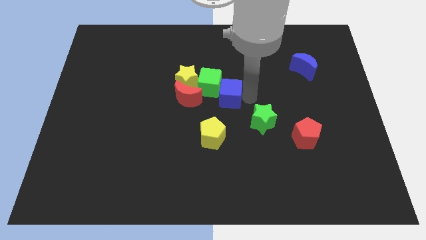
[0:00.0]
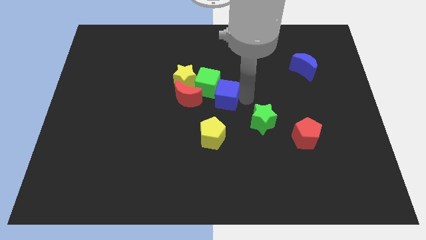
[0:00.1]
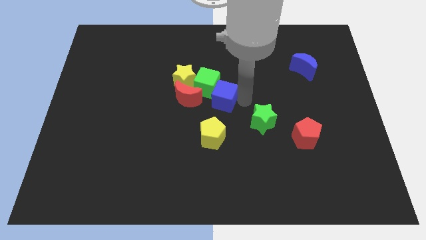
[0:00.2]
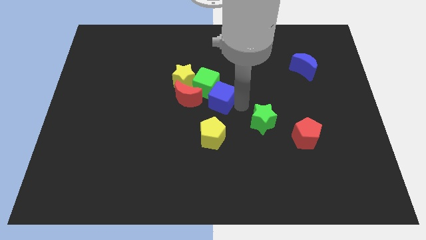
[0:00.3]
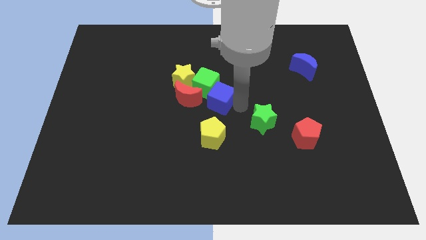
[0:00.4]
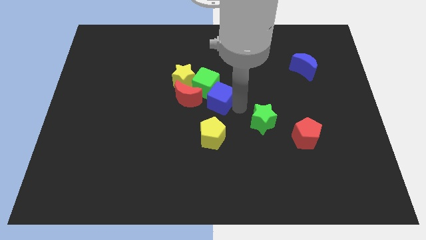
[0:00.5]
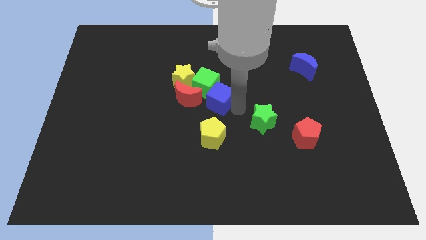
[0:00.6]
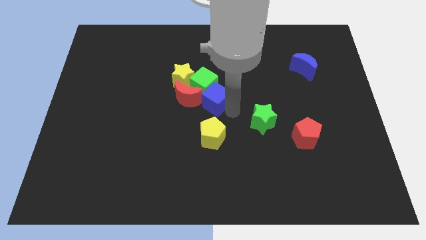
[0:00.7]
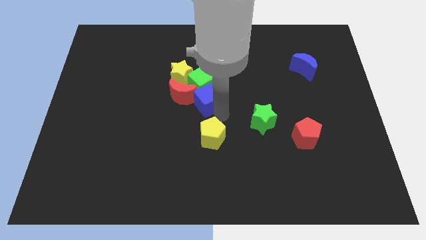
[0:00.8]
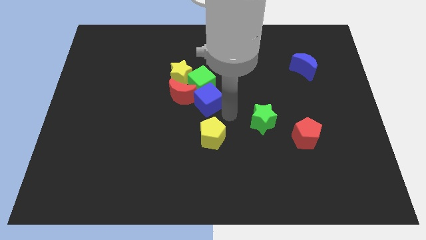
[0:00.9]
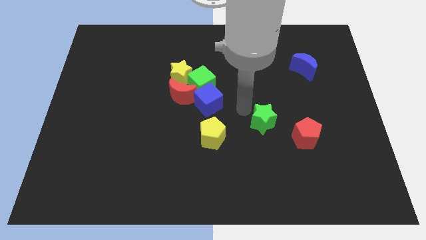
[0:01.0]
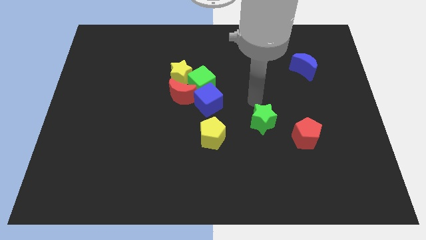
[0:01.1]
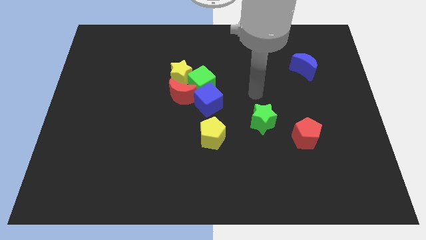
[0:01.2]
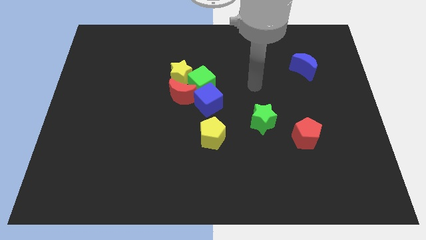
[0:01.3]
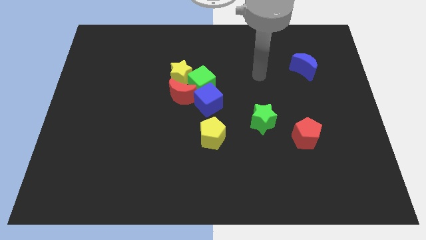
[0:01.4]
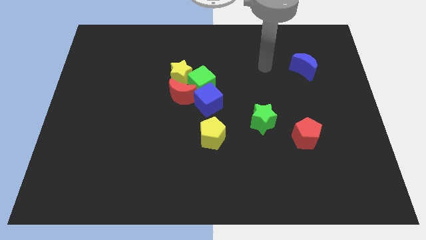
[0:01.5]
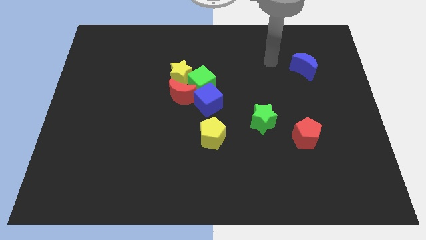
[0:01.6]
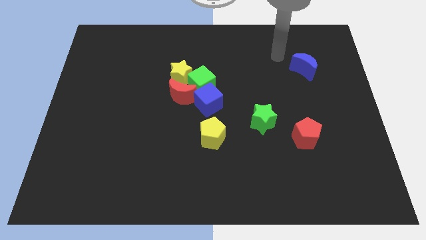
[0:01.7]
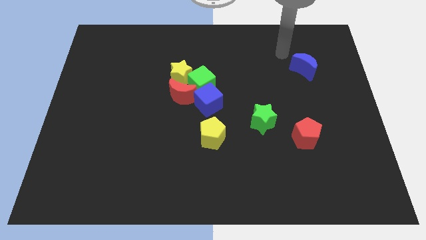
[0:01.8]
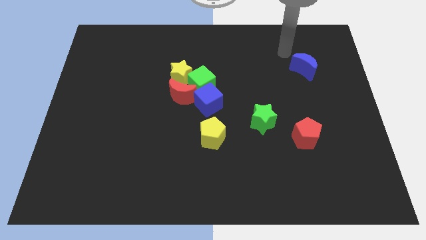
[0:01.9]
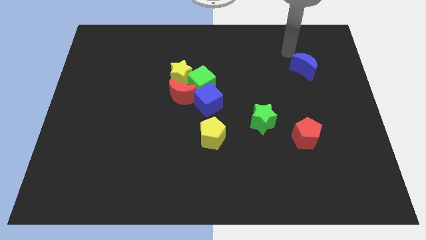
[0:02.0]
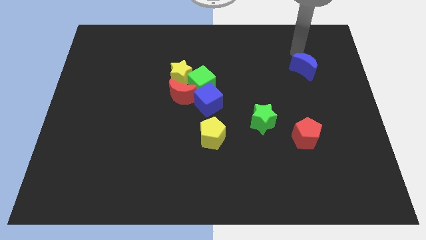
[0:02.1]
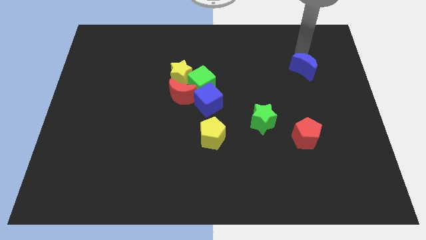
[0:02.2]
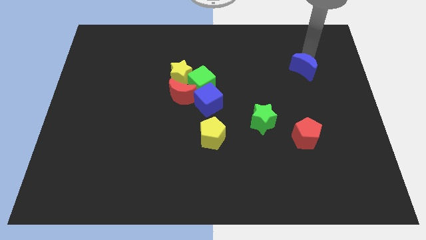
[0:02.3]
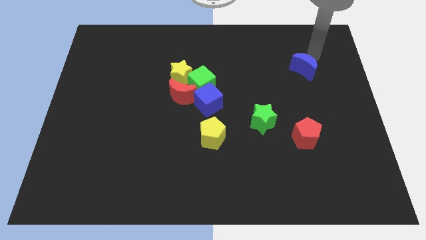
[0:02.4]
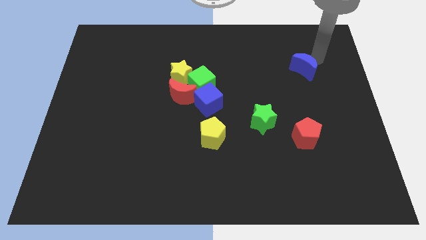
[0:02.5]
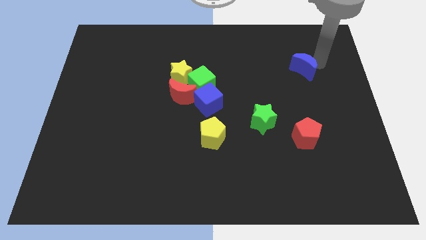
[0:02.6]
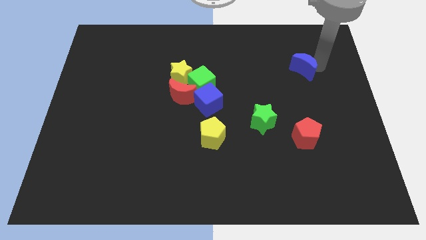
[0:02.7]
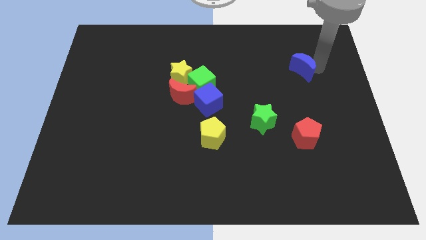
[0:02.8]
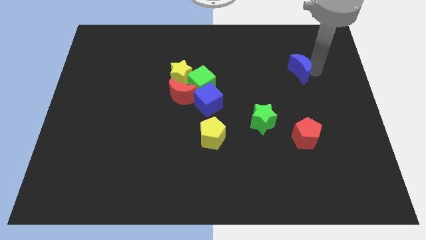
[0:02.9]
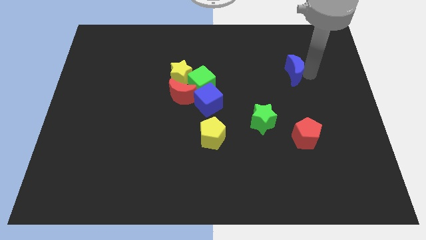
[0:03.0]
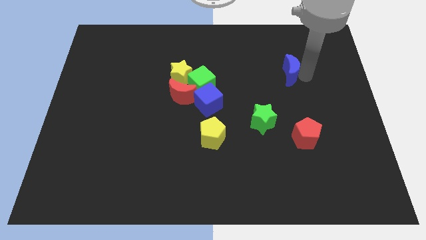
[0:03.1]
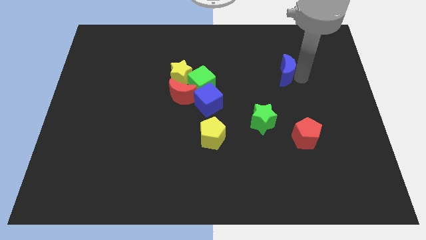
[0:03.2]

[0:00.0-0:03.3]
slightly move the blue crescent to the left

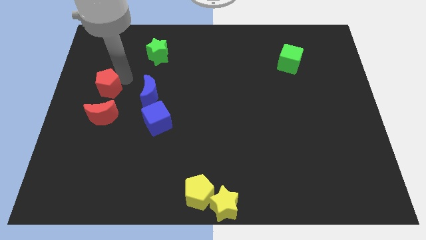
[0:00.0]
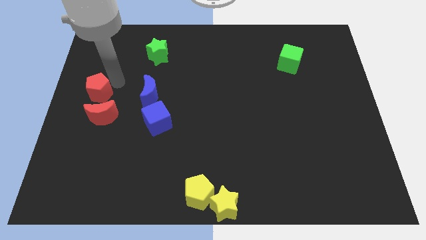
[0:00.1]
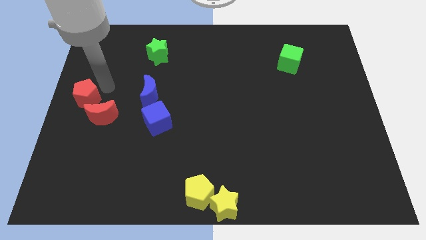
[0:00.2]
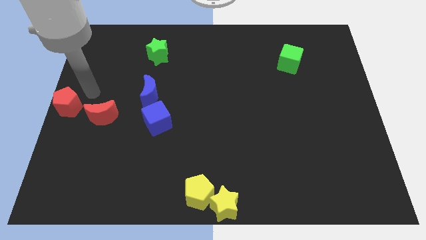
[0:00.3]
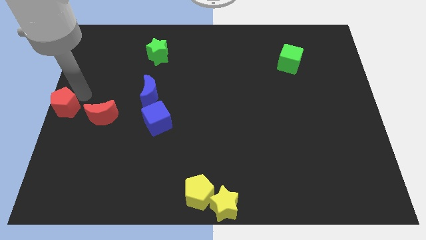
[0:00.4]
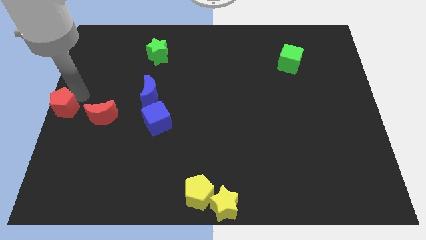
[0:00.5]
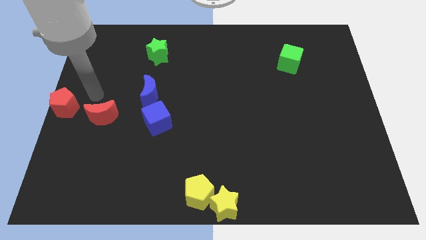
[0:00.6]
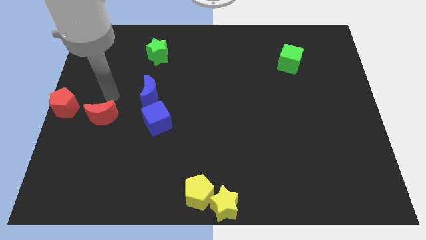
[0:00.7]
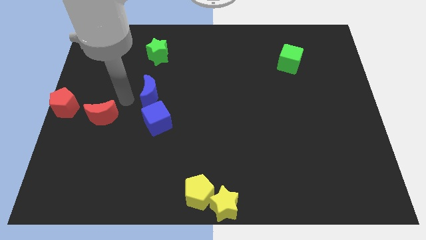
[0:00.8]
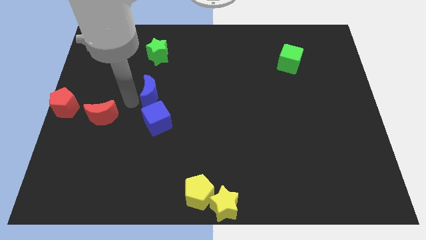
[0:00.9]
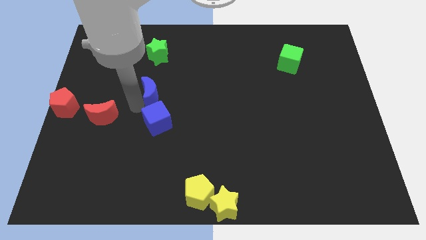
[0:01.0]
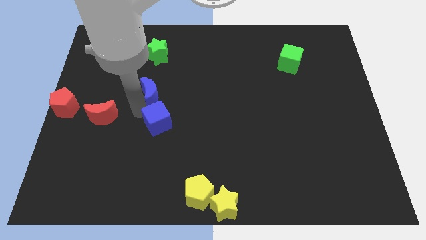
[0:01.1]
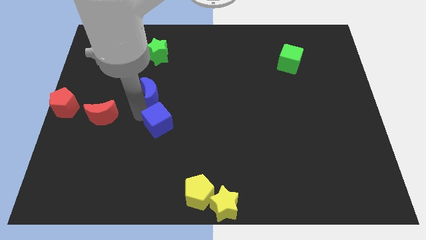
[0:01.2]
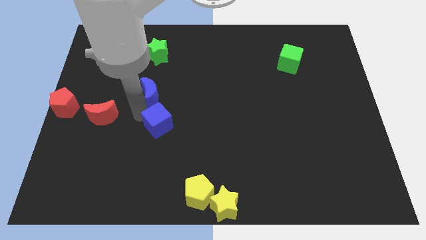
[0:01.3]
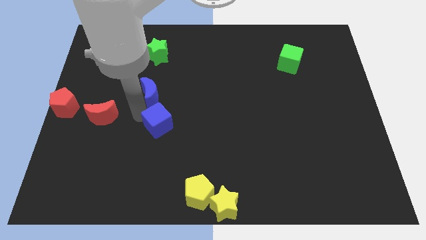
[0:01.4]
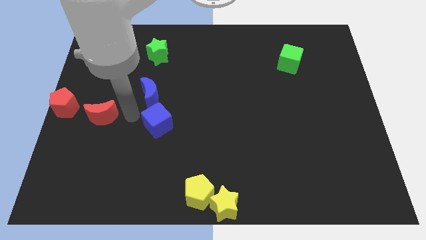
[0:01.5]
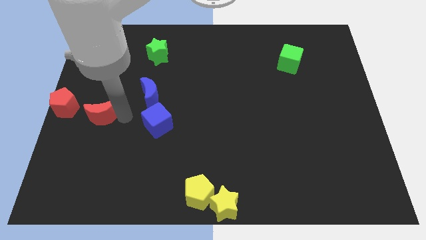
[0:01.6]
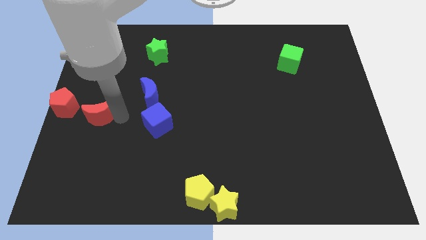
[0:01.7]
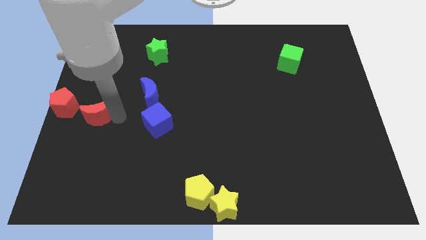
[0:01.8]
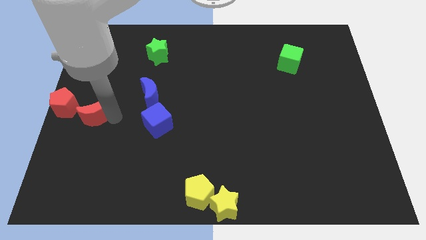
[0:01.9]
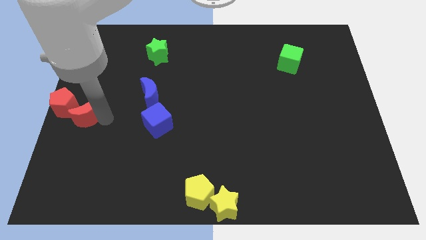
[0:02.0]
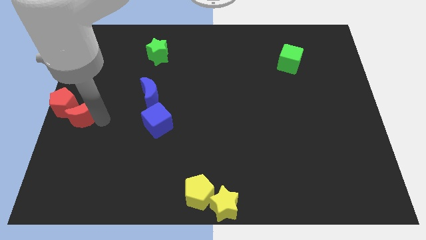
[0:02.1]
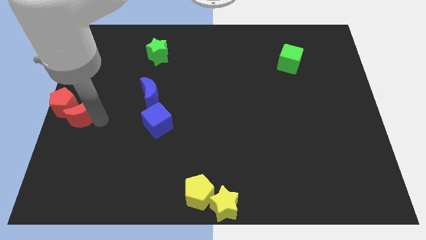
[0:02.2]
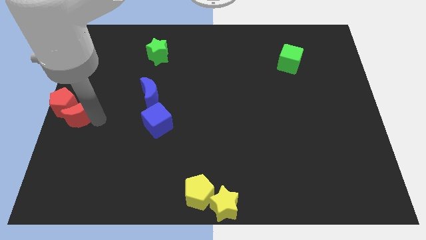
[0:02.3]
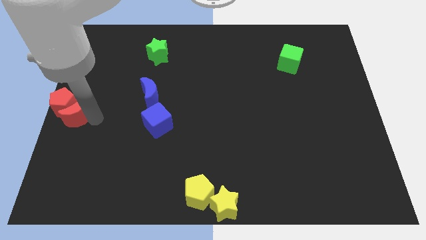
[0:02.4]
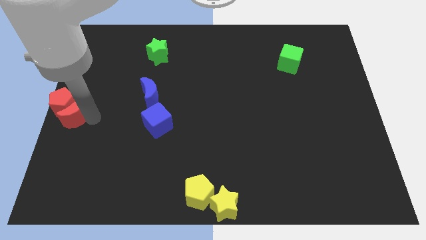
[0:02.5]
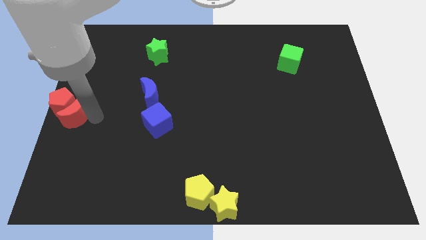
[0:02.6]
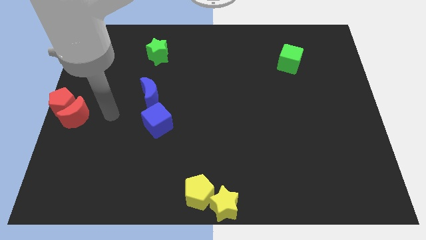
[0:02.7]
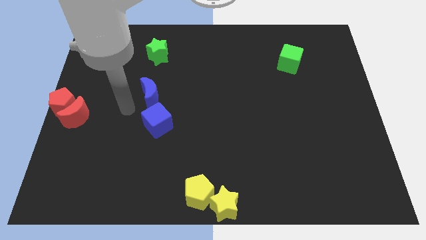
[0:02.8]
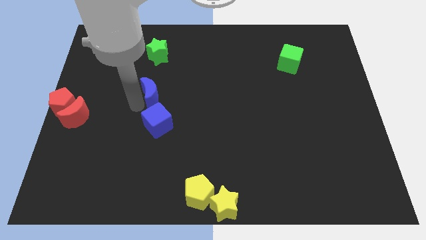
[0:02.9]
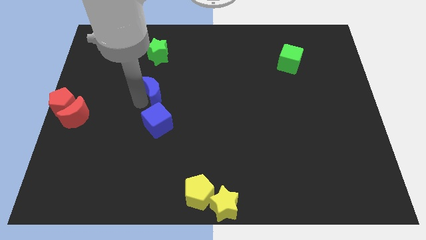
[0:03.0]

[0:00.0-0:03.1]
push the red crescent to the center left to touch the red pentagon

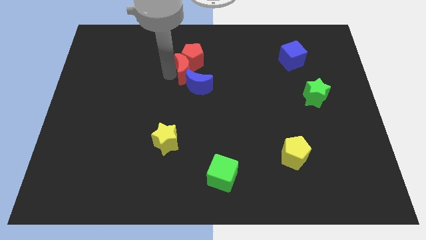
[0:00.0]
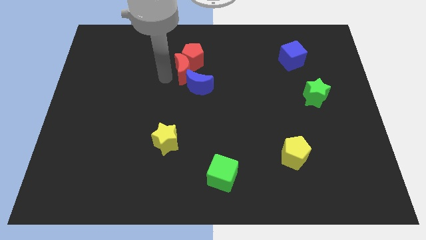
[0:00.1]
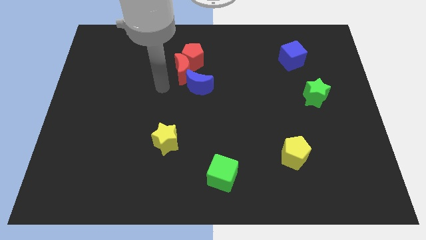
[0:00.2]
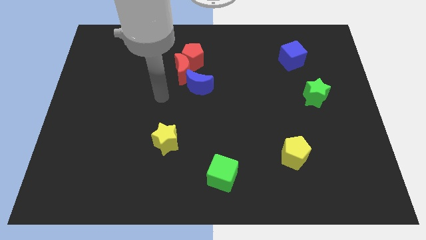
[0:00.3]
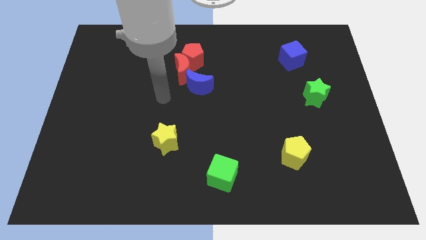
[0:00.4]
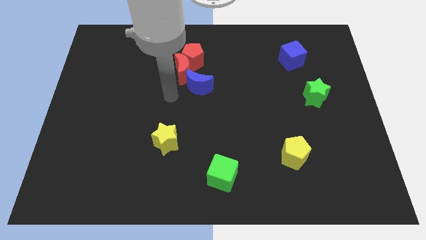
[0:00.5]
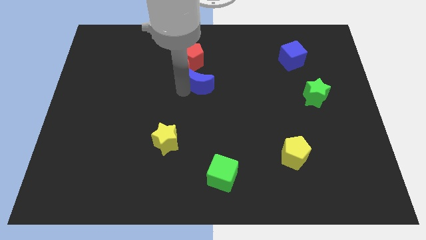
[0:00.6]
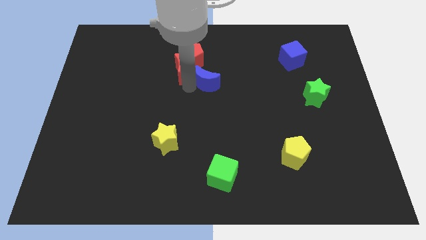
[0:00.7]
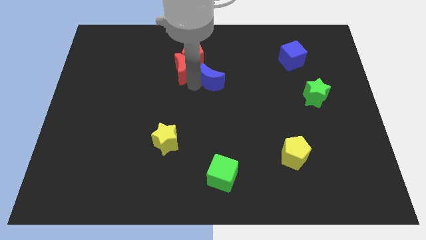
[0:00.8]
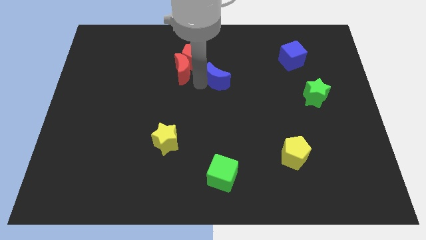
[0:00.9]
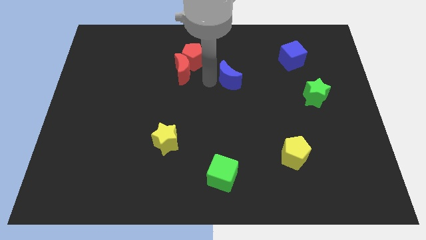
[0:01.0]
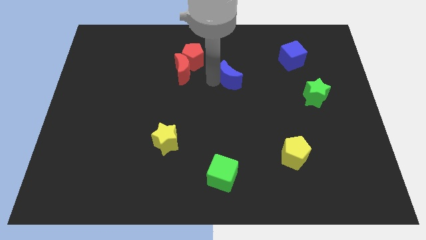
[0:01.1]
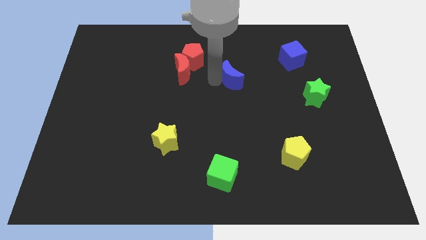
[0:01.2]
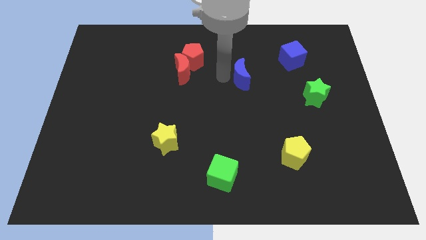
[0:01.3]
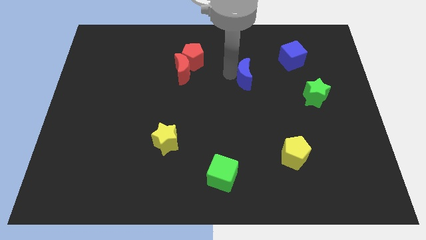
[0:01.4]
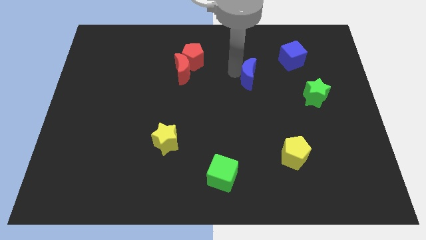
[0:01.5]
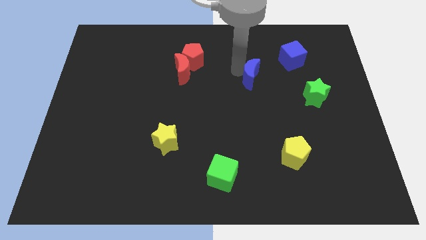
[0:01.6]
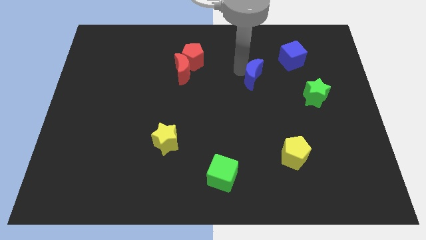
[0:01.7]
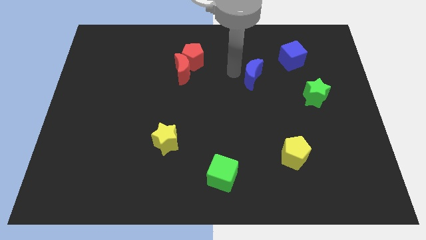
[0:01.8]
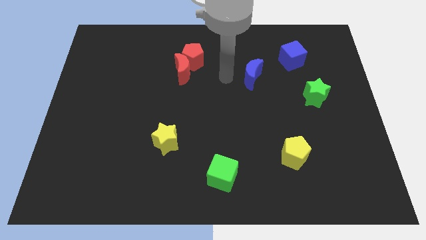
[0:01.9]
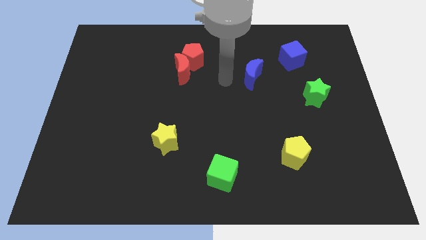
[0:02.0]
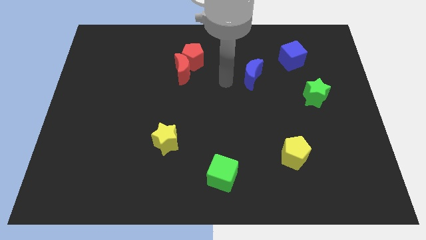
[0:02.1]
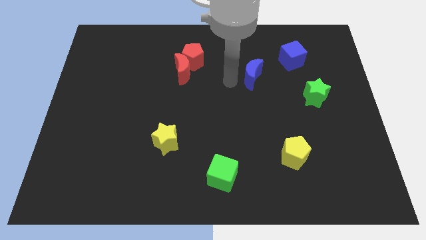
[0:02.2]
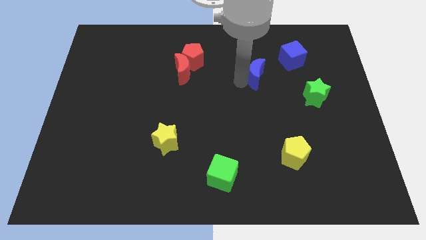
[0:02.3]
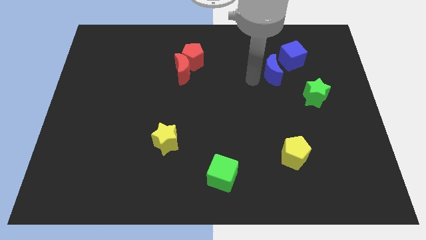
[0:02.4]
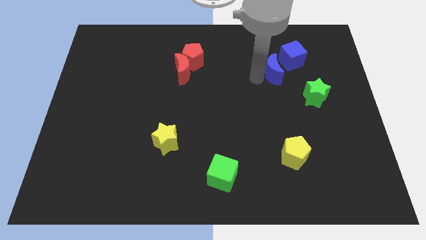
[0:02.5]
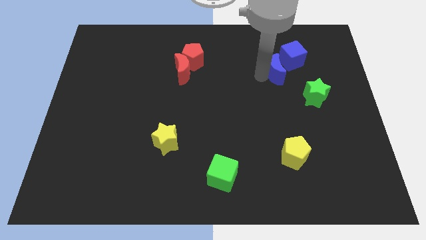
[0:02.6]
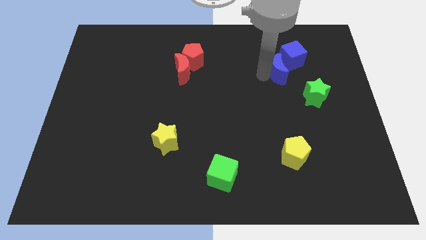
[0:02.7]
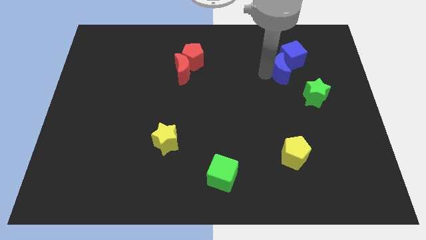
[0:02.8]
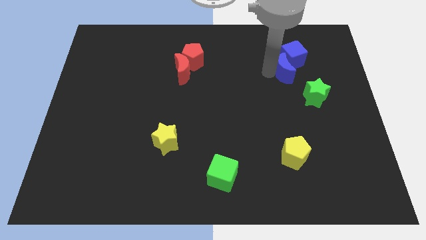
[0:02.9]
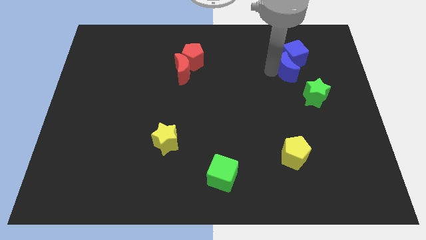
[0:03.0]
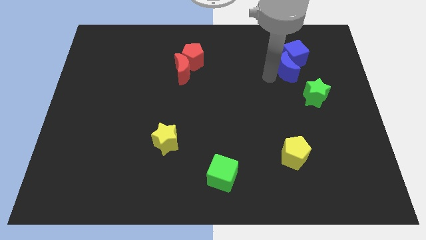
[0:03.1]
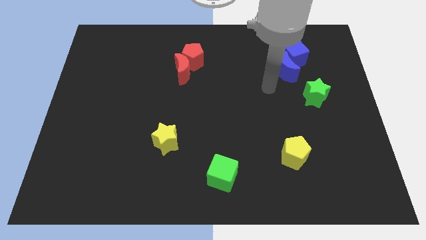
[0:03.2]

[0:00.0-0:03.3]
move red moon into the blue cube
